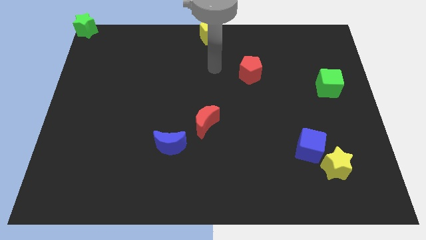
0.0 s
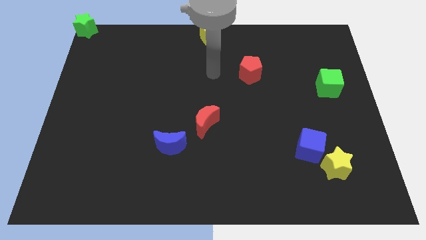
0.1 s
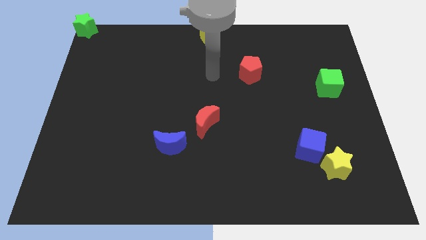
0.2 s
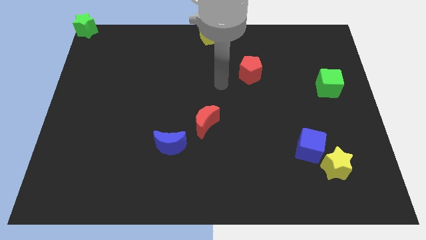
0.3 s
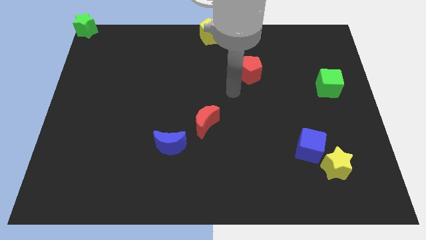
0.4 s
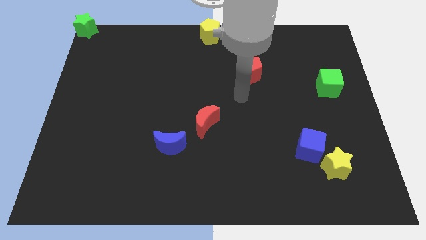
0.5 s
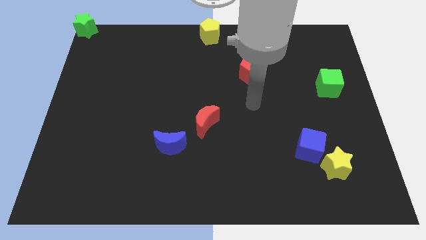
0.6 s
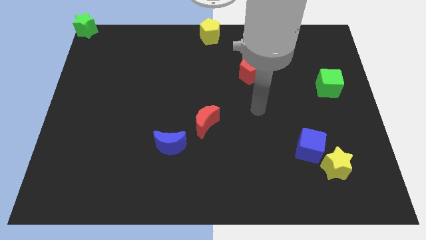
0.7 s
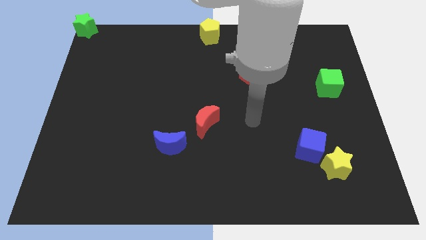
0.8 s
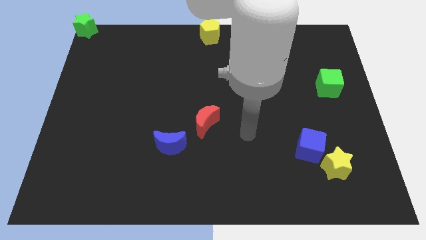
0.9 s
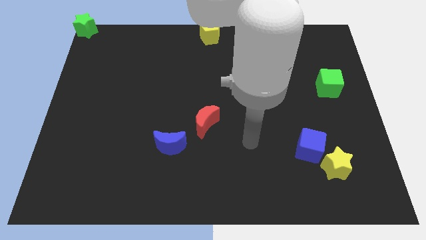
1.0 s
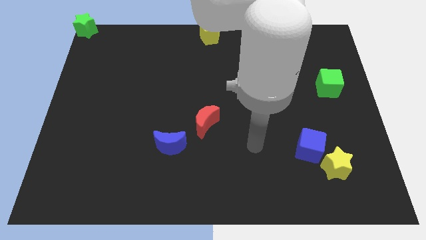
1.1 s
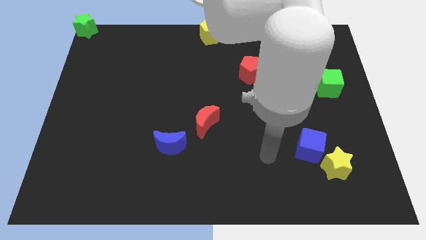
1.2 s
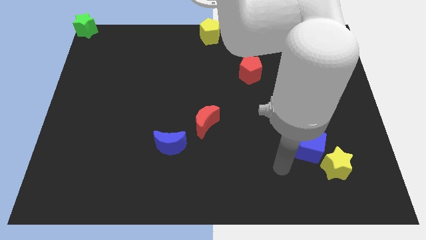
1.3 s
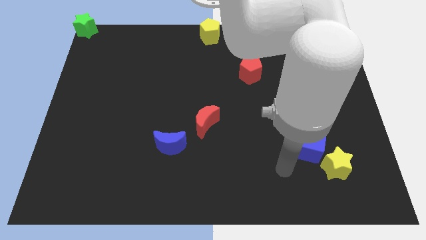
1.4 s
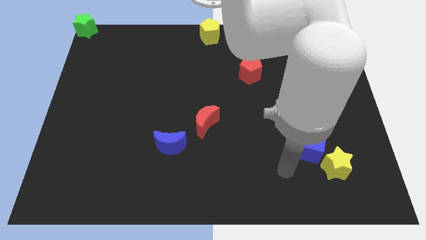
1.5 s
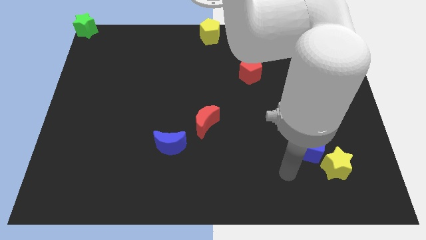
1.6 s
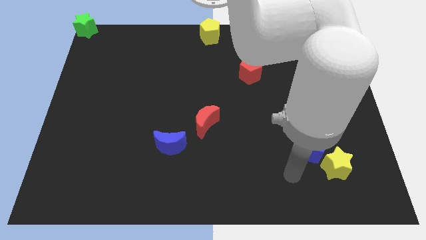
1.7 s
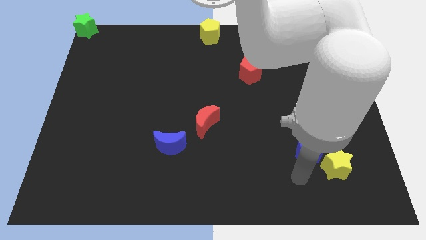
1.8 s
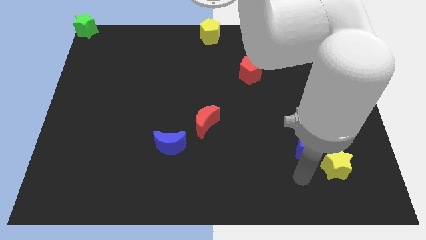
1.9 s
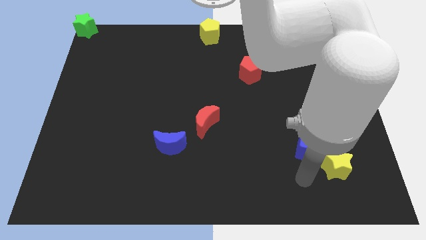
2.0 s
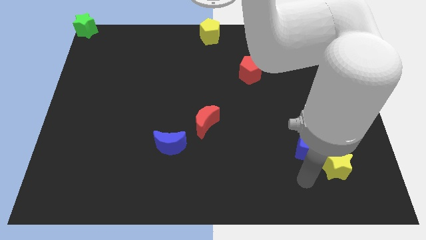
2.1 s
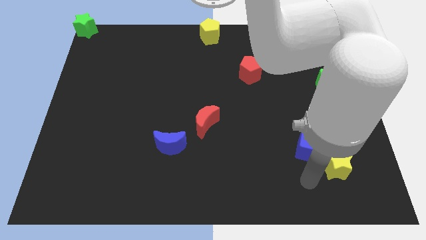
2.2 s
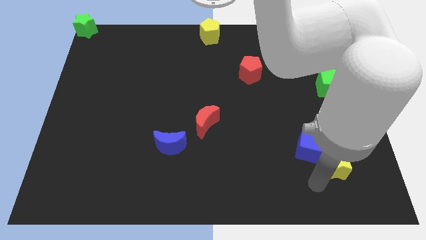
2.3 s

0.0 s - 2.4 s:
place your arm to the left of yellow star

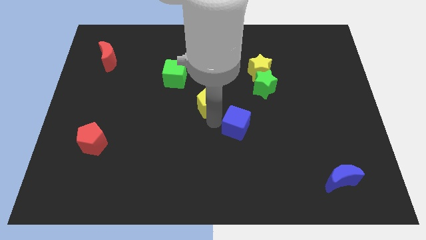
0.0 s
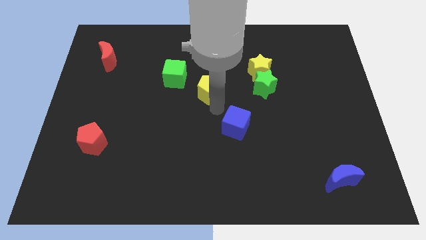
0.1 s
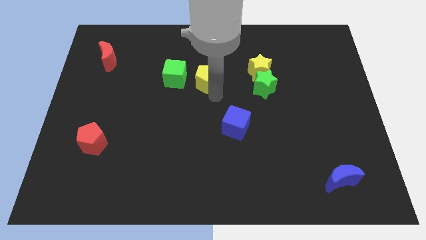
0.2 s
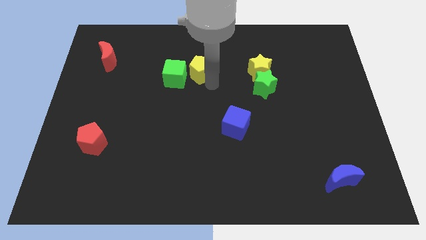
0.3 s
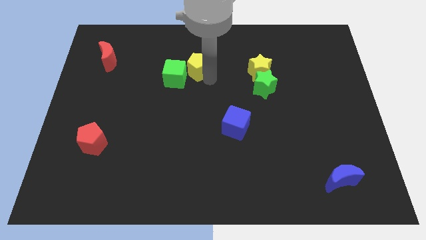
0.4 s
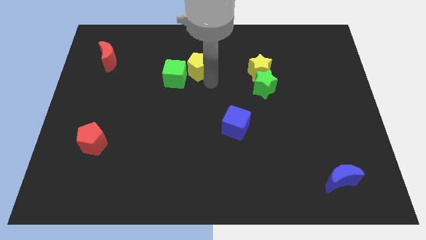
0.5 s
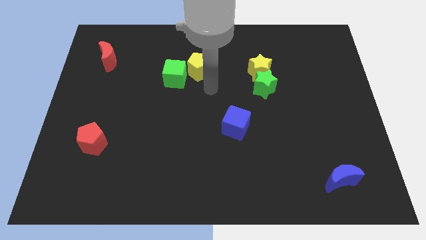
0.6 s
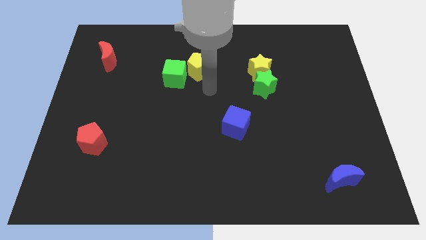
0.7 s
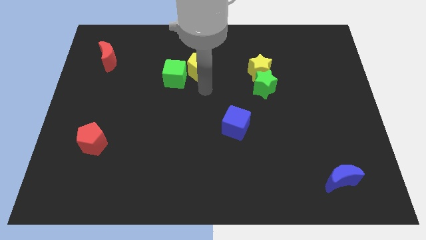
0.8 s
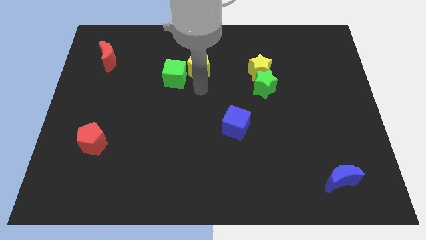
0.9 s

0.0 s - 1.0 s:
move the yellow pentagon at the top right of the green cube

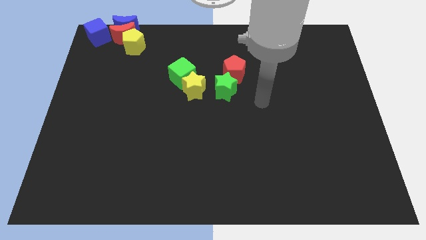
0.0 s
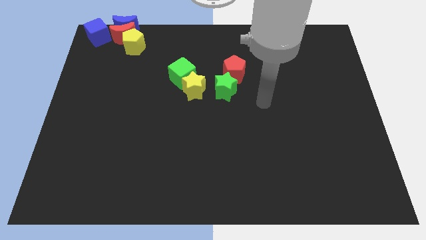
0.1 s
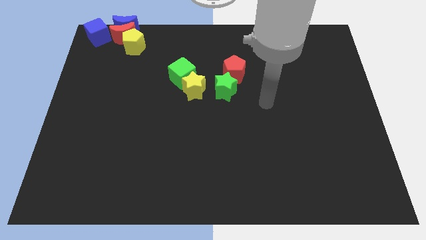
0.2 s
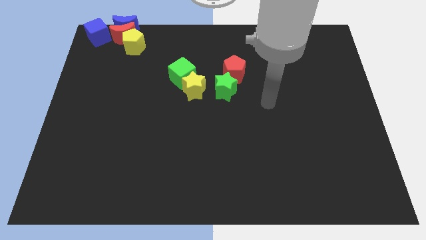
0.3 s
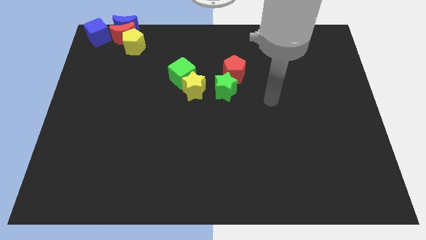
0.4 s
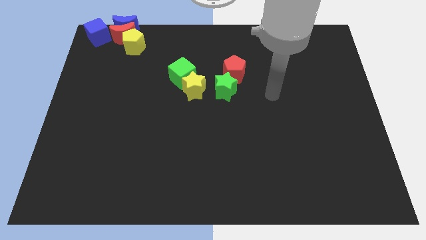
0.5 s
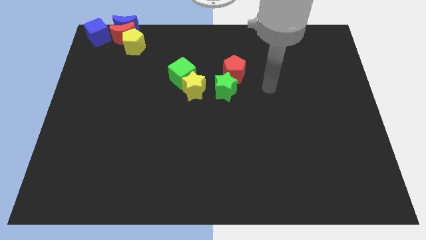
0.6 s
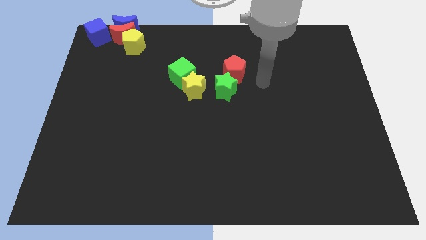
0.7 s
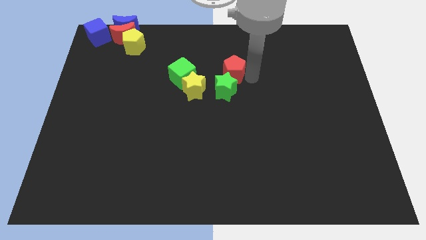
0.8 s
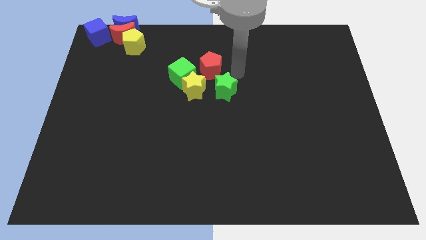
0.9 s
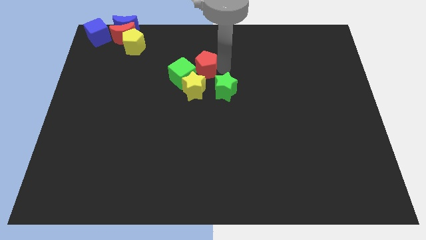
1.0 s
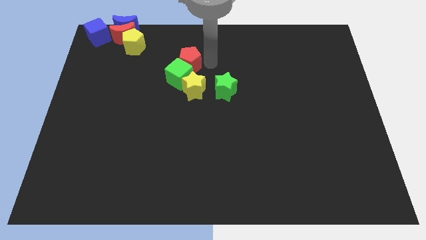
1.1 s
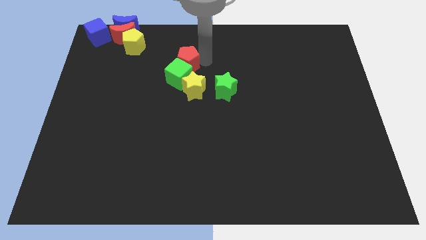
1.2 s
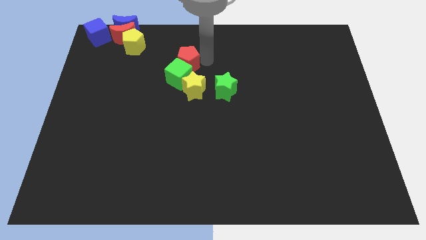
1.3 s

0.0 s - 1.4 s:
push the red pentagon close to the green cube

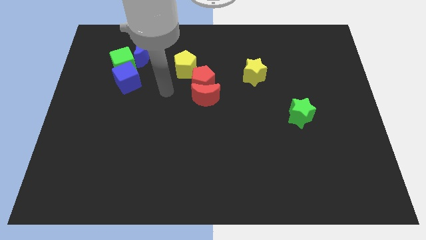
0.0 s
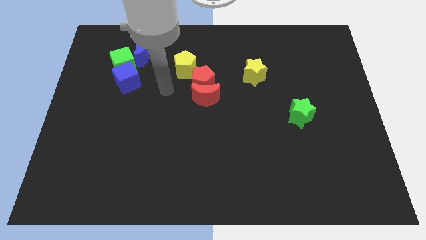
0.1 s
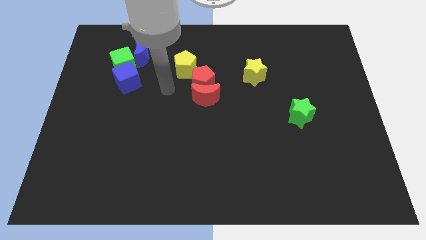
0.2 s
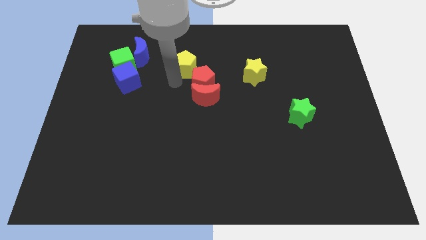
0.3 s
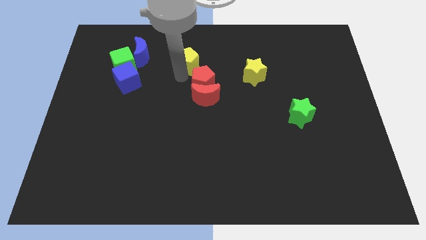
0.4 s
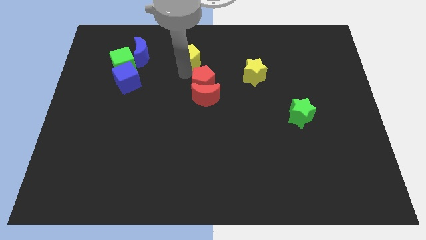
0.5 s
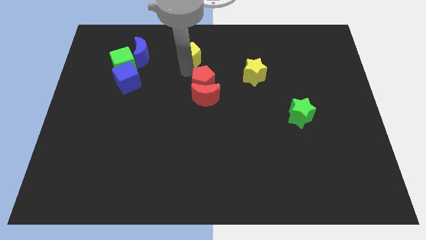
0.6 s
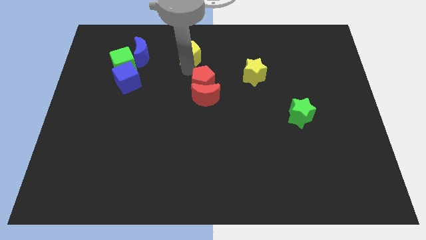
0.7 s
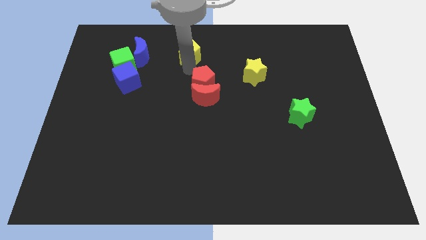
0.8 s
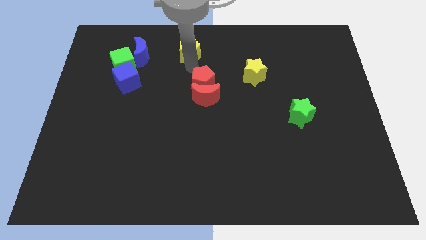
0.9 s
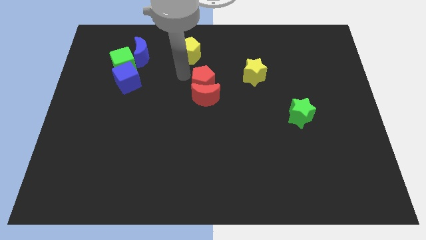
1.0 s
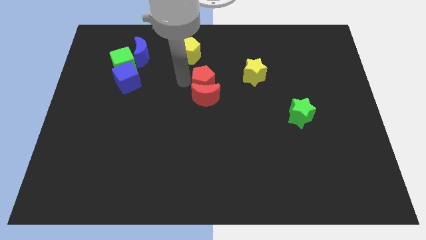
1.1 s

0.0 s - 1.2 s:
push the yellow pentagon towards the top of the board

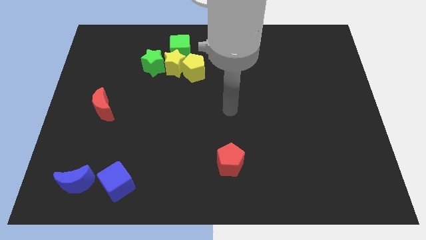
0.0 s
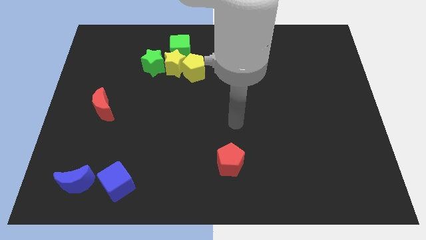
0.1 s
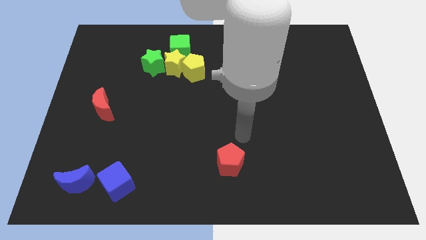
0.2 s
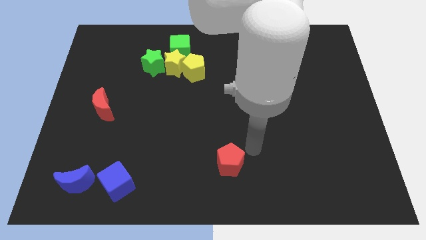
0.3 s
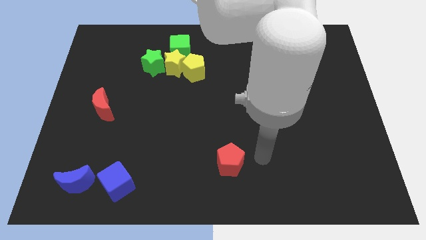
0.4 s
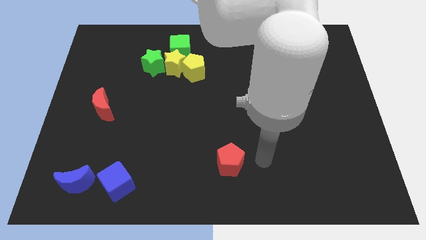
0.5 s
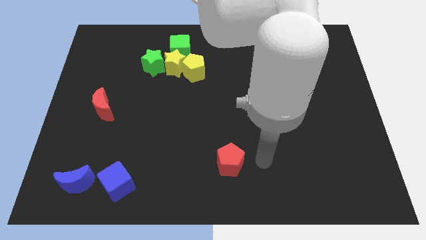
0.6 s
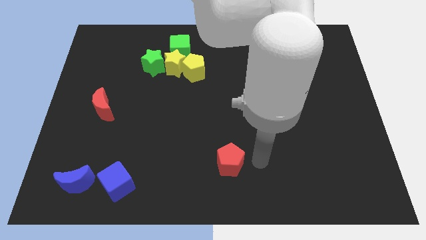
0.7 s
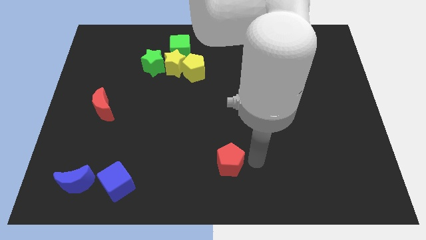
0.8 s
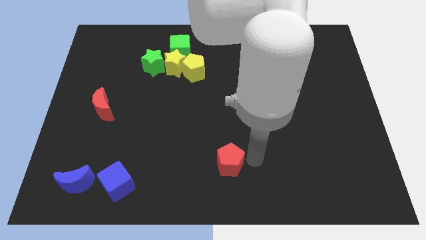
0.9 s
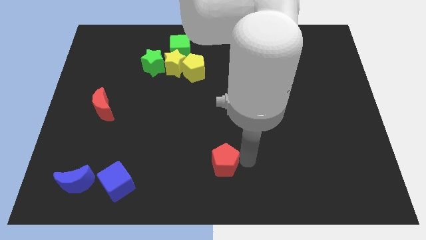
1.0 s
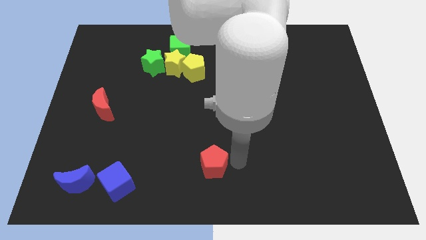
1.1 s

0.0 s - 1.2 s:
push the red pentagon slightly to the left side of the board

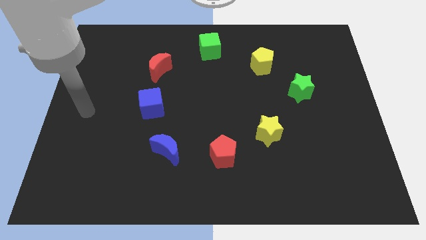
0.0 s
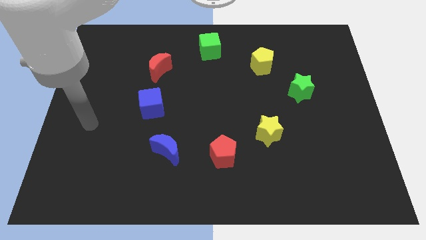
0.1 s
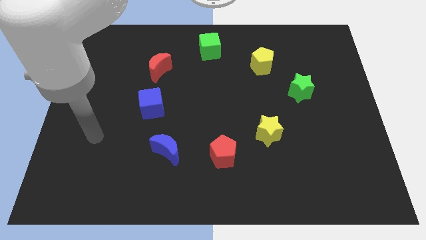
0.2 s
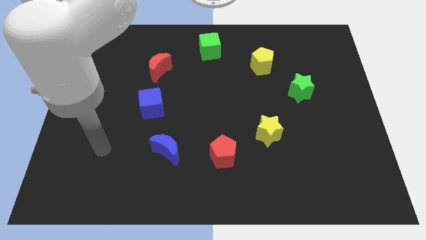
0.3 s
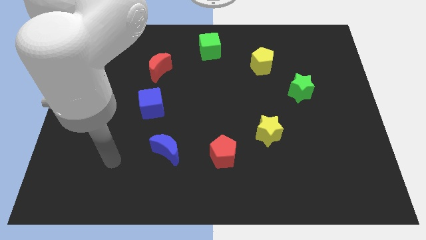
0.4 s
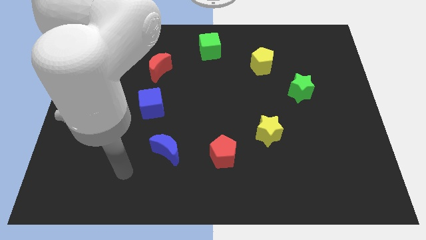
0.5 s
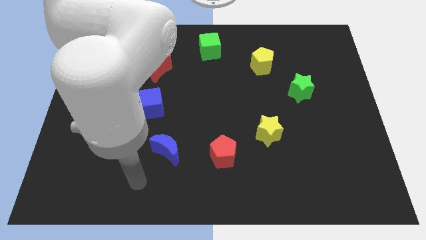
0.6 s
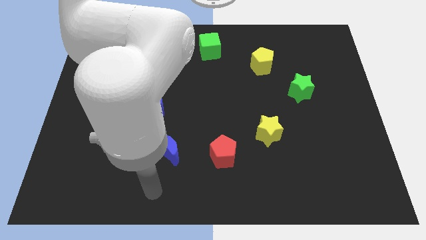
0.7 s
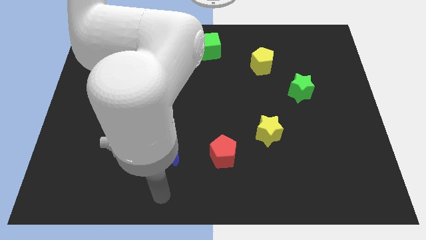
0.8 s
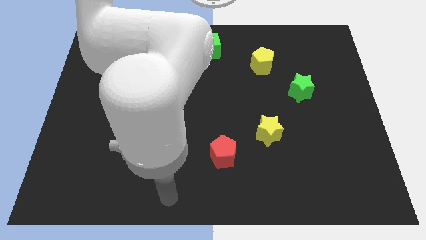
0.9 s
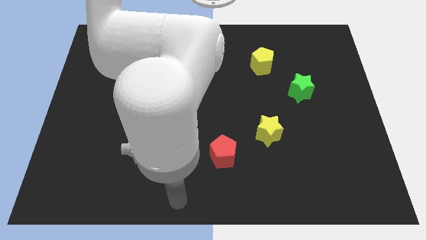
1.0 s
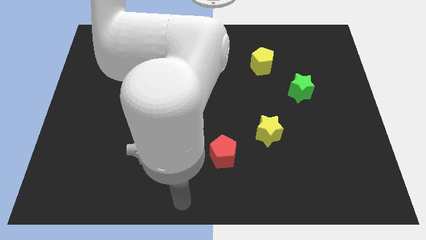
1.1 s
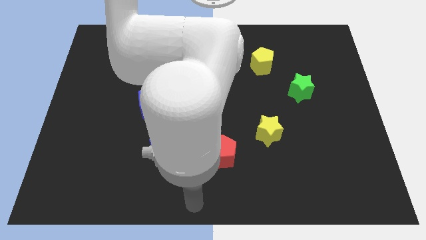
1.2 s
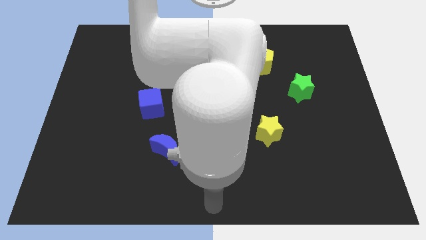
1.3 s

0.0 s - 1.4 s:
move your arm to the bottom center of the board

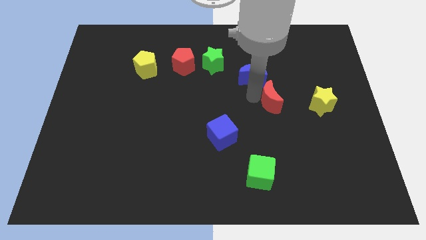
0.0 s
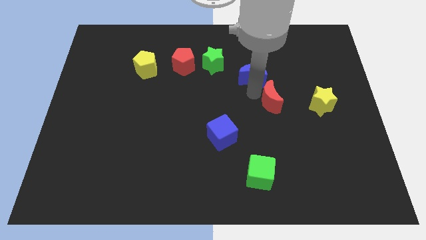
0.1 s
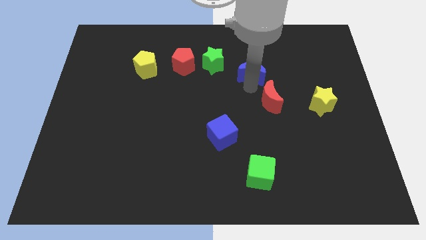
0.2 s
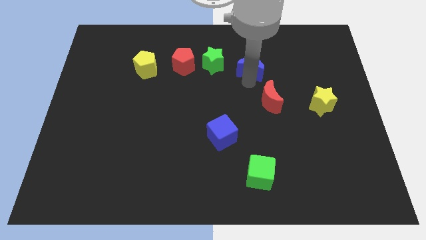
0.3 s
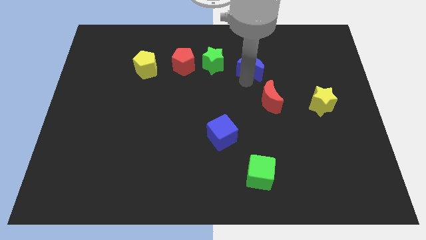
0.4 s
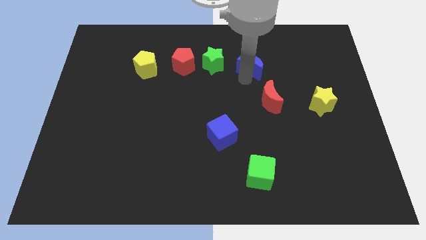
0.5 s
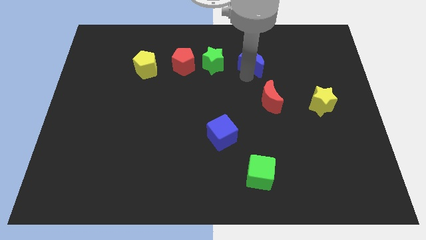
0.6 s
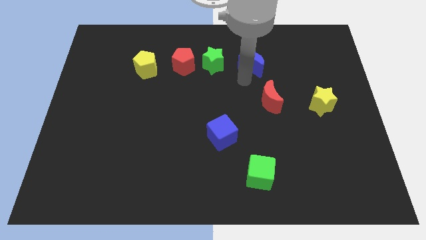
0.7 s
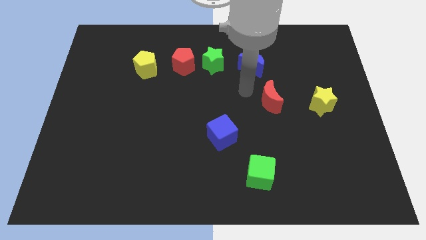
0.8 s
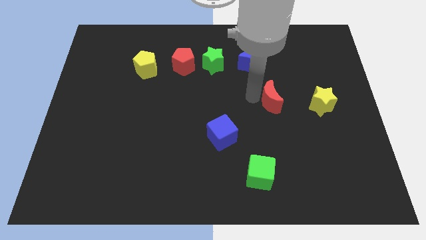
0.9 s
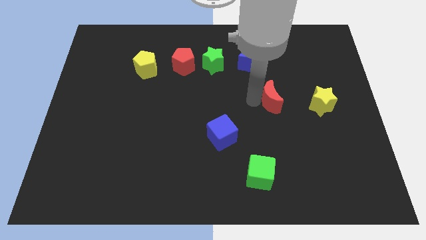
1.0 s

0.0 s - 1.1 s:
push the blue moon to the right of the green star
